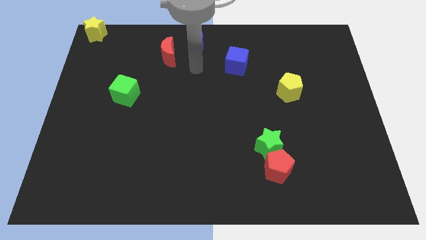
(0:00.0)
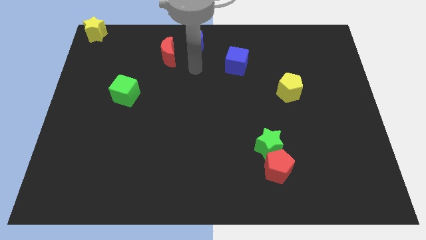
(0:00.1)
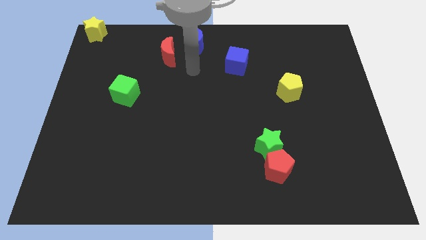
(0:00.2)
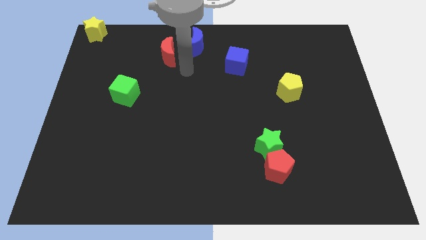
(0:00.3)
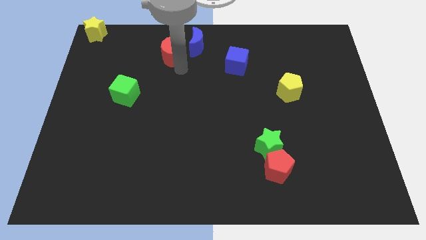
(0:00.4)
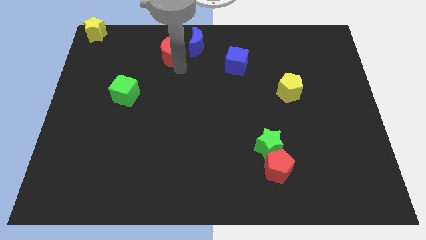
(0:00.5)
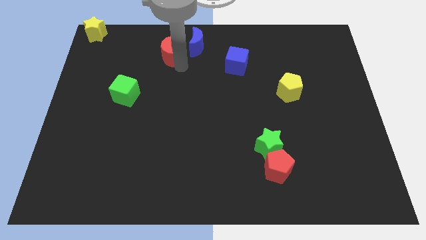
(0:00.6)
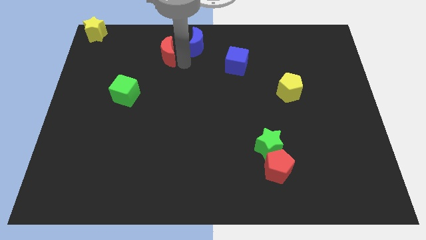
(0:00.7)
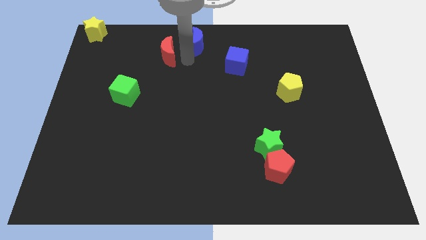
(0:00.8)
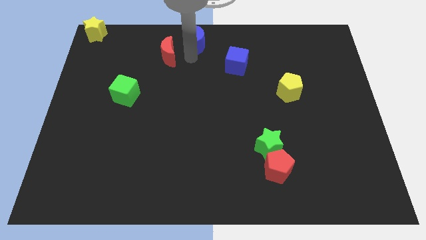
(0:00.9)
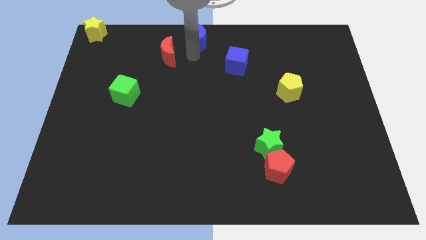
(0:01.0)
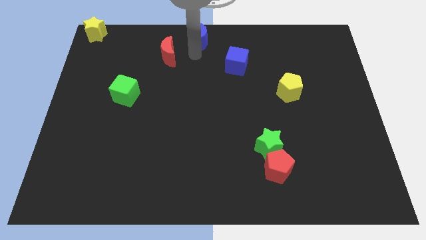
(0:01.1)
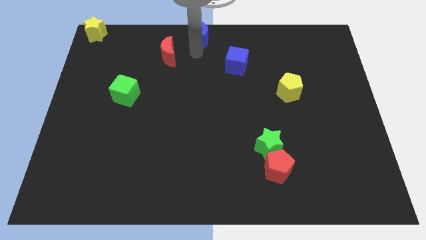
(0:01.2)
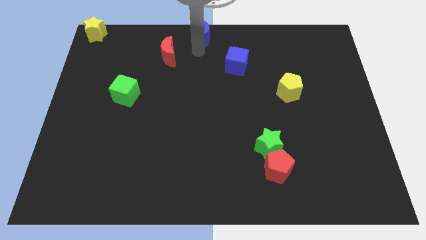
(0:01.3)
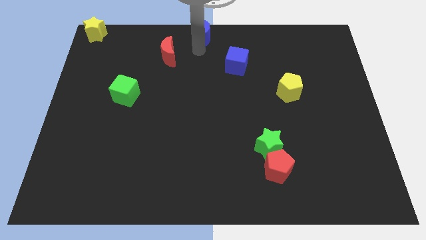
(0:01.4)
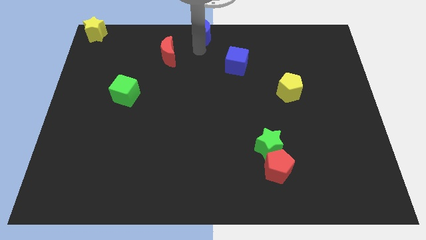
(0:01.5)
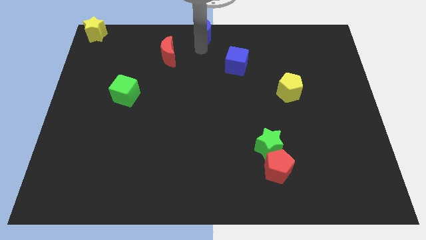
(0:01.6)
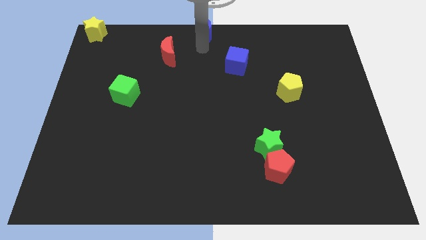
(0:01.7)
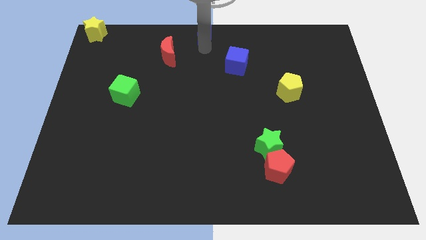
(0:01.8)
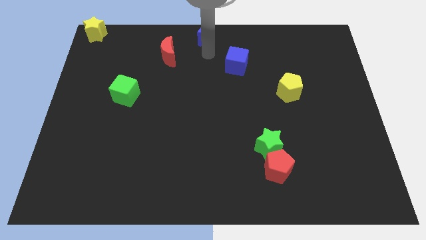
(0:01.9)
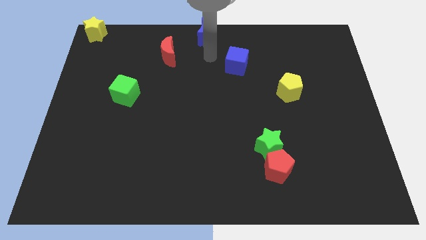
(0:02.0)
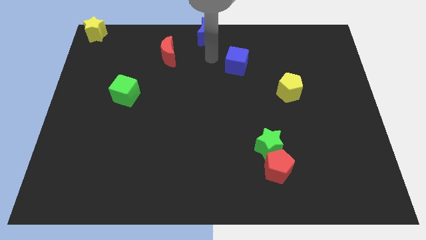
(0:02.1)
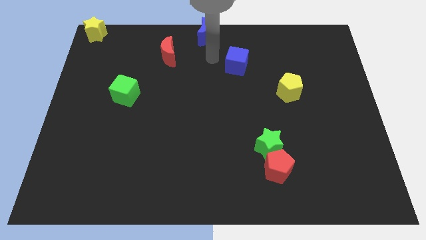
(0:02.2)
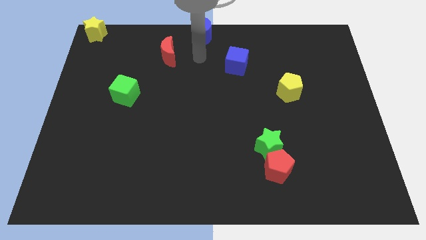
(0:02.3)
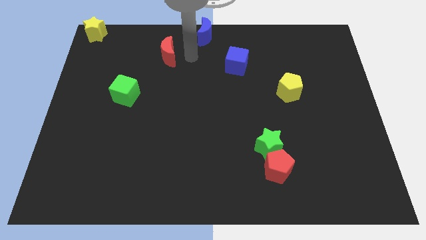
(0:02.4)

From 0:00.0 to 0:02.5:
push the blue moon to the top middle of the board

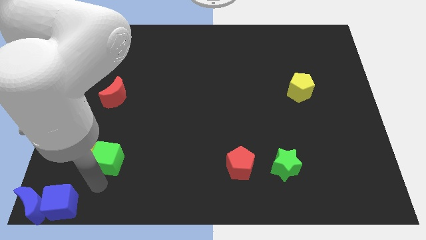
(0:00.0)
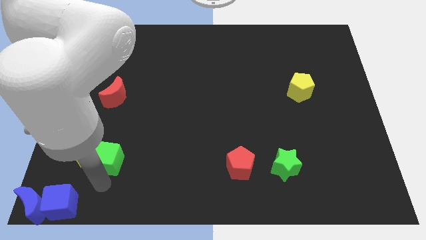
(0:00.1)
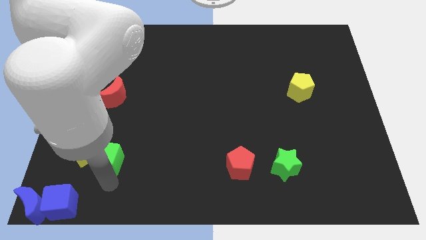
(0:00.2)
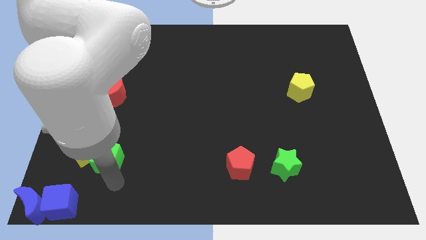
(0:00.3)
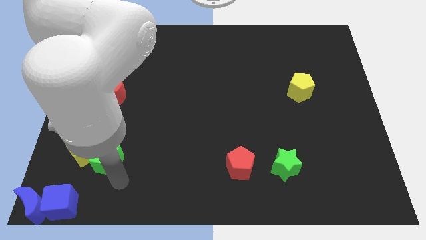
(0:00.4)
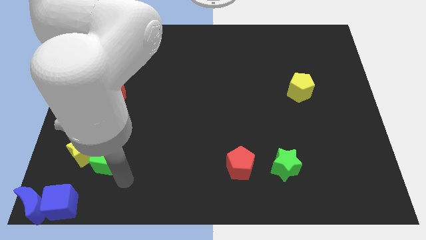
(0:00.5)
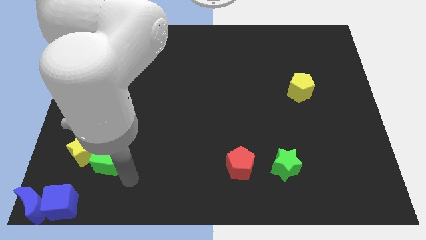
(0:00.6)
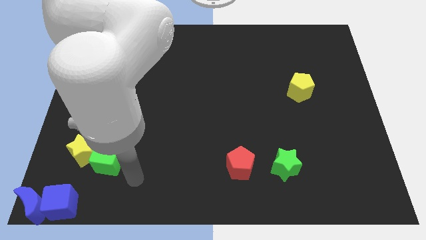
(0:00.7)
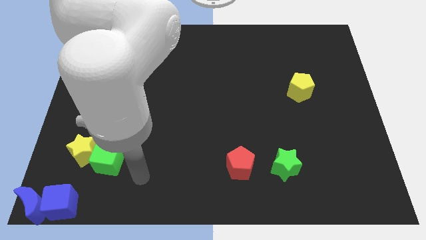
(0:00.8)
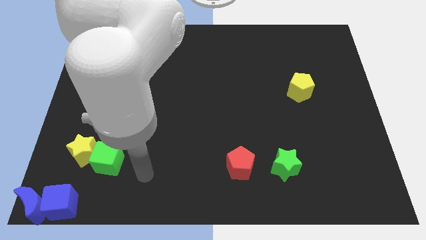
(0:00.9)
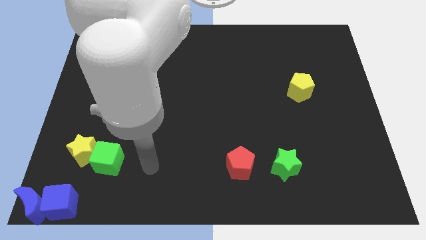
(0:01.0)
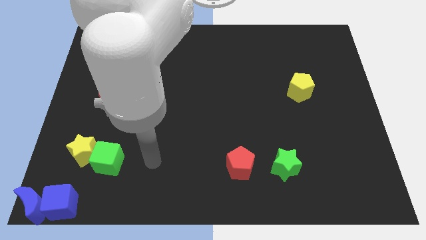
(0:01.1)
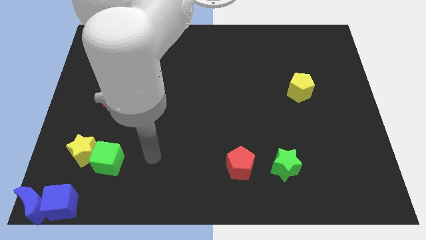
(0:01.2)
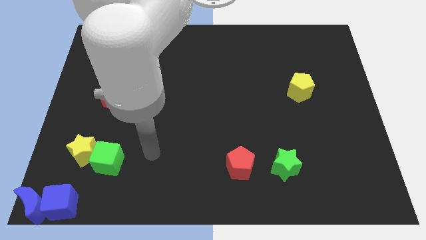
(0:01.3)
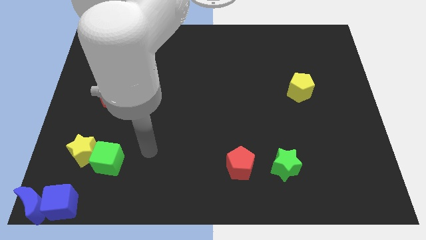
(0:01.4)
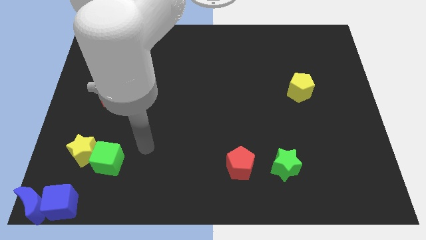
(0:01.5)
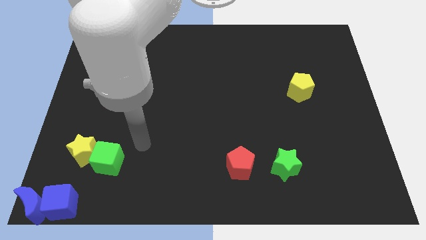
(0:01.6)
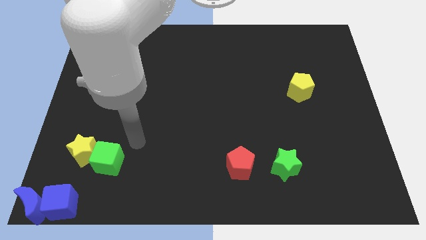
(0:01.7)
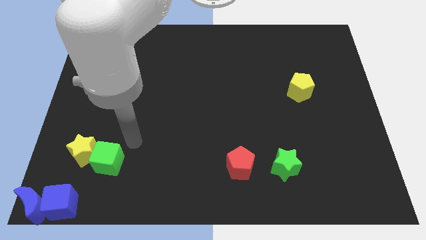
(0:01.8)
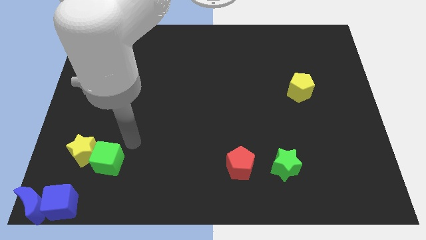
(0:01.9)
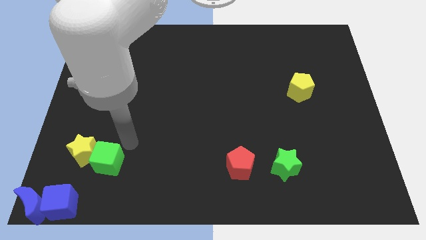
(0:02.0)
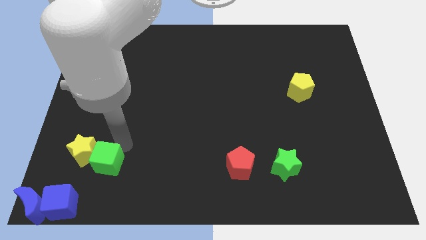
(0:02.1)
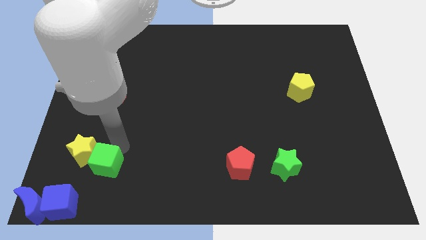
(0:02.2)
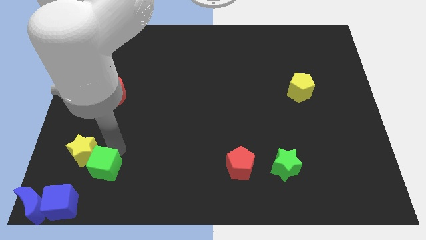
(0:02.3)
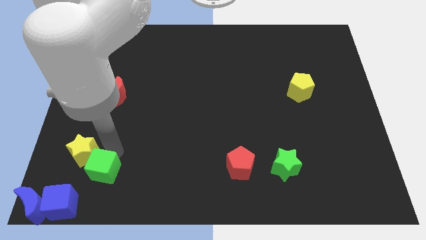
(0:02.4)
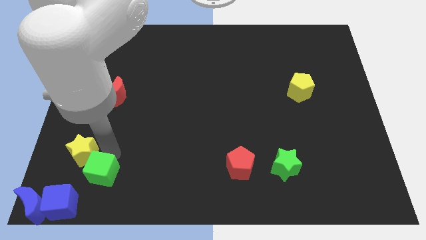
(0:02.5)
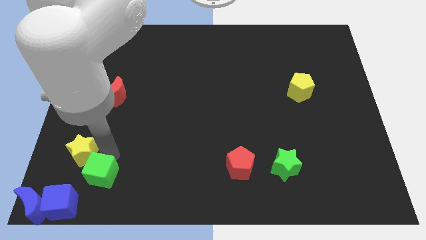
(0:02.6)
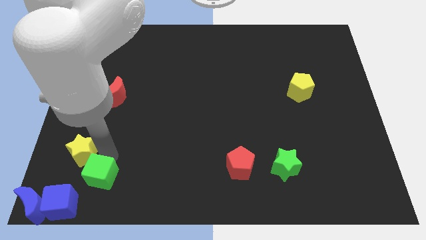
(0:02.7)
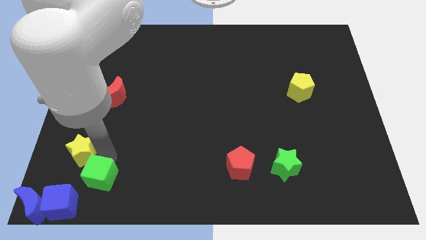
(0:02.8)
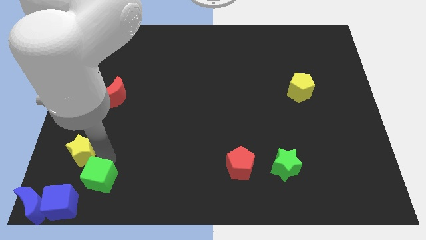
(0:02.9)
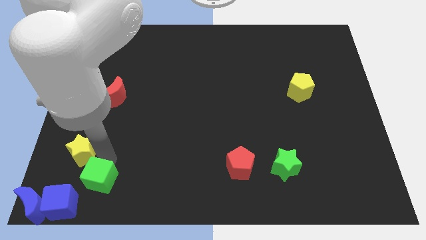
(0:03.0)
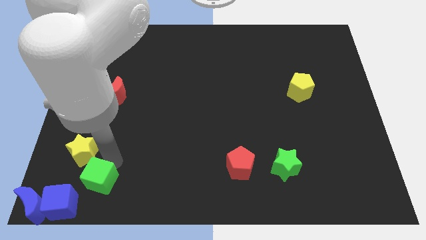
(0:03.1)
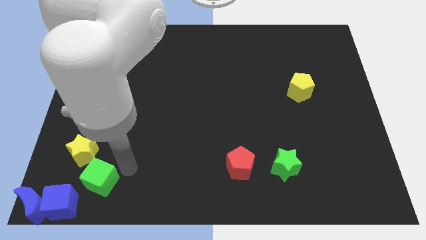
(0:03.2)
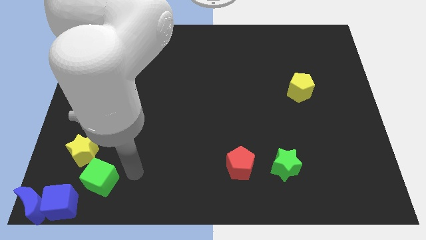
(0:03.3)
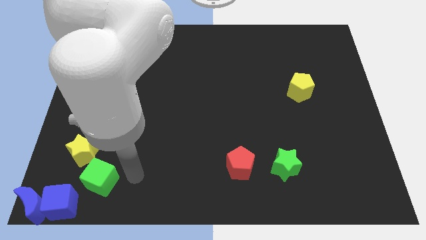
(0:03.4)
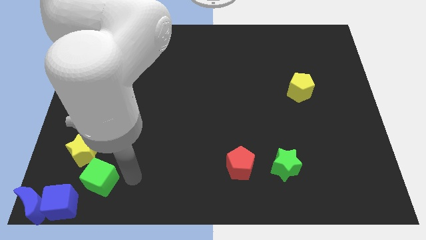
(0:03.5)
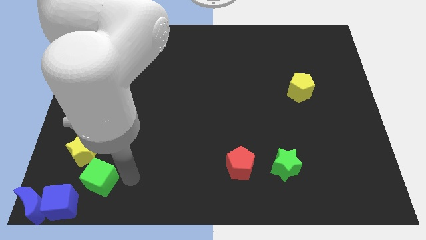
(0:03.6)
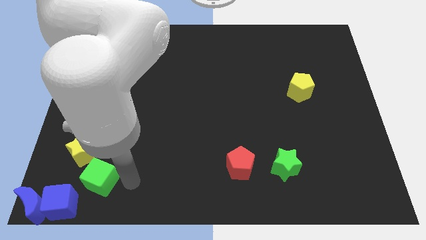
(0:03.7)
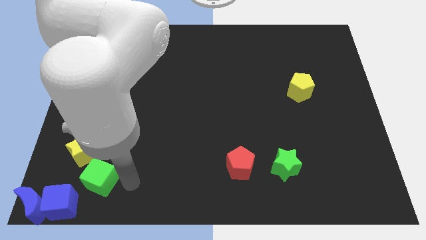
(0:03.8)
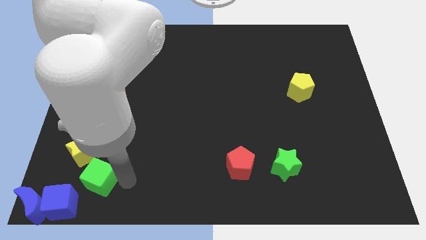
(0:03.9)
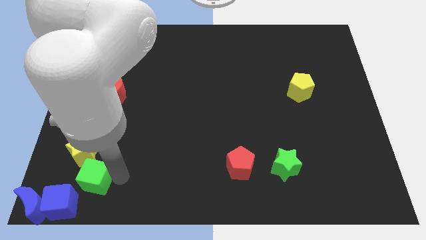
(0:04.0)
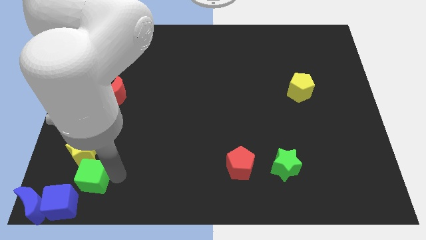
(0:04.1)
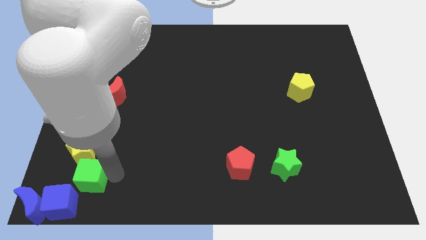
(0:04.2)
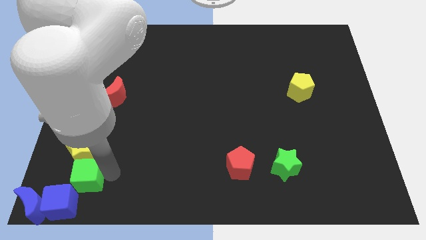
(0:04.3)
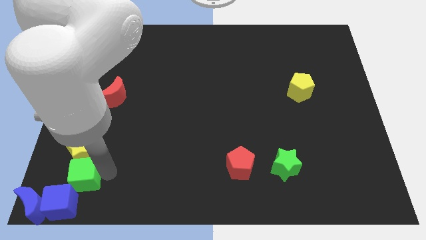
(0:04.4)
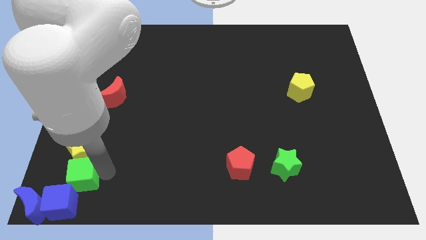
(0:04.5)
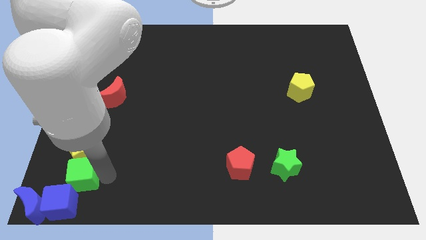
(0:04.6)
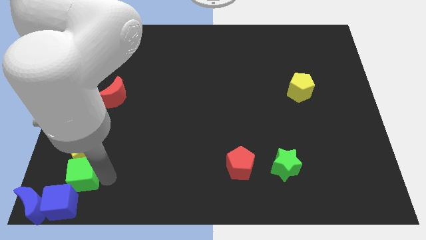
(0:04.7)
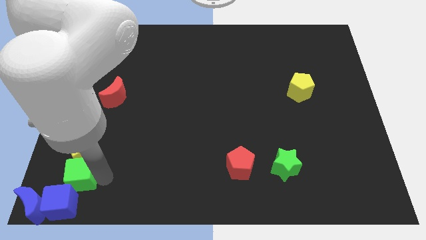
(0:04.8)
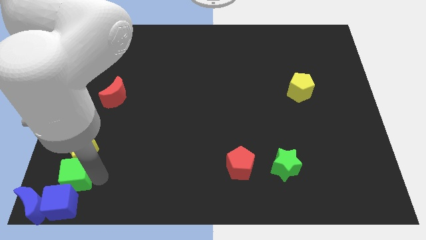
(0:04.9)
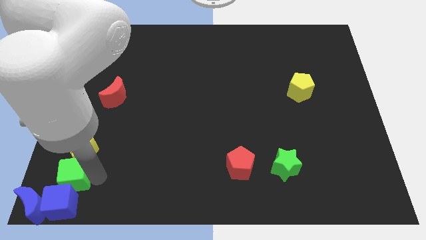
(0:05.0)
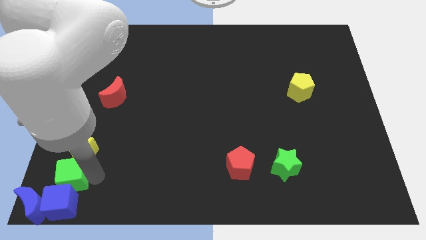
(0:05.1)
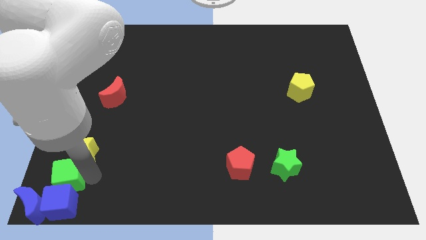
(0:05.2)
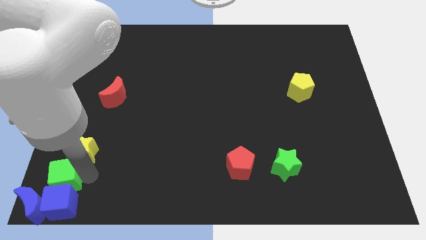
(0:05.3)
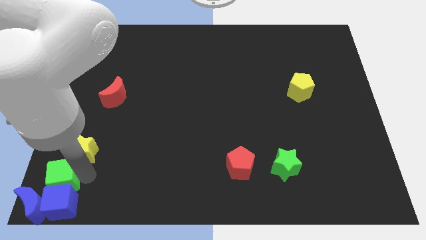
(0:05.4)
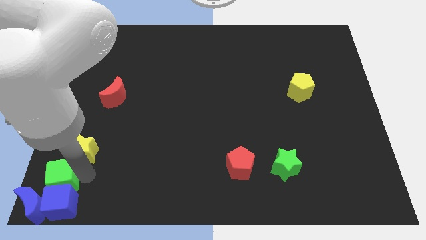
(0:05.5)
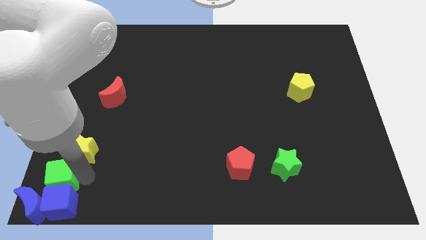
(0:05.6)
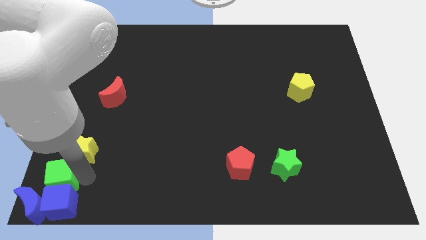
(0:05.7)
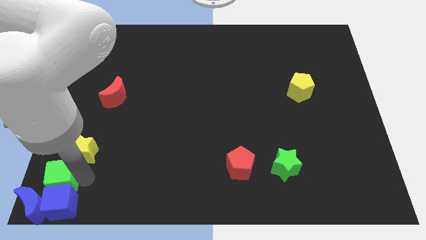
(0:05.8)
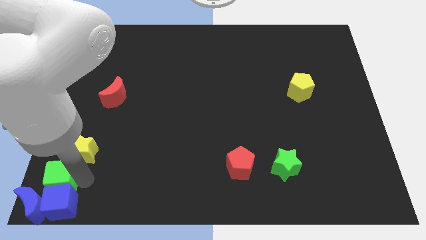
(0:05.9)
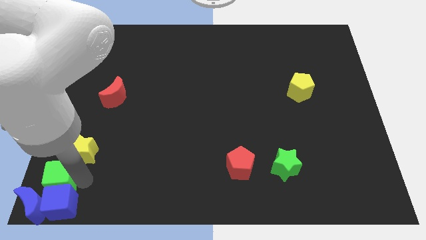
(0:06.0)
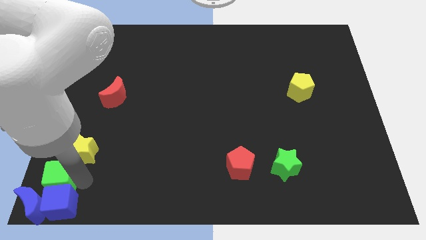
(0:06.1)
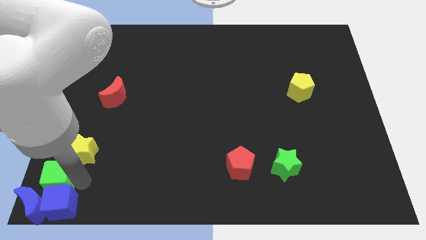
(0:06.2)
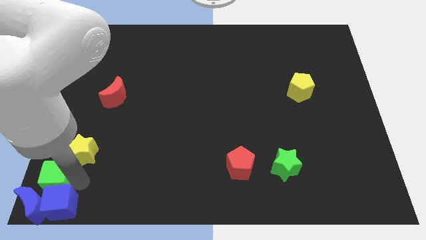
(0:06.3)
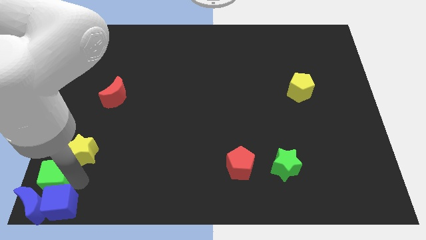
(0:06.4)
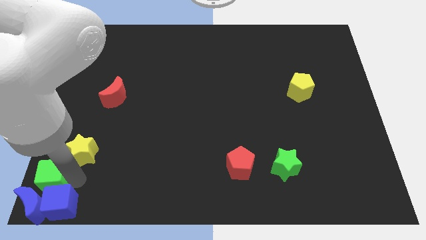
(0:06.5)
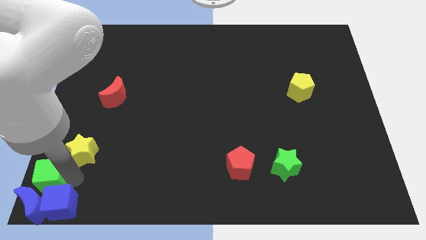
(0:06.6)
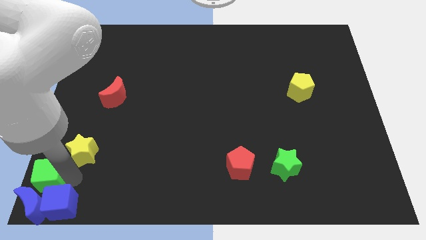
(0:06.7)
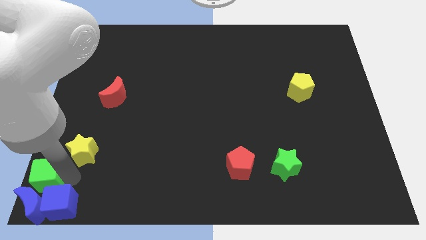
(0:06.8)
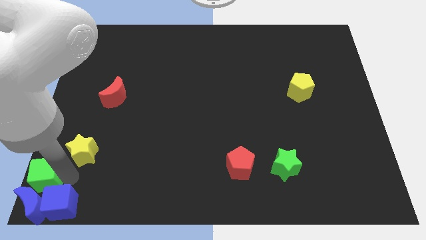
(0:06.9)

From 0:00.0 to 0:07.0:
place the green cube above the blue blocks
